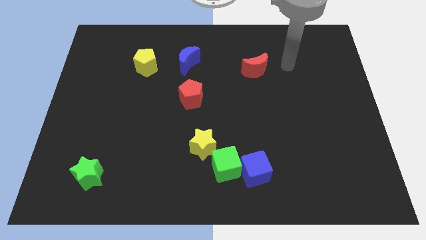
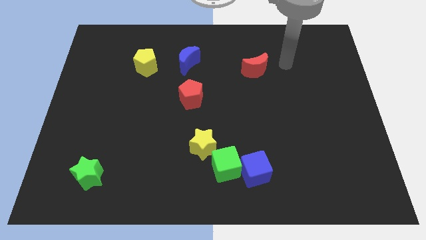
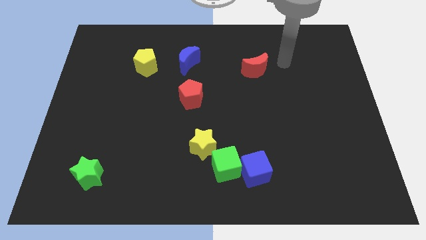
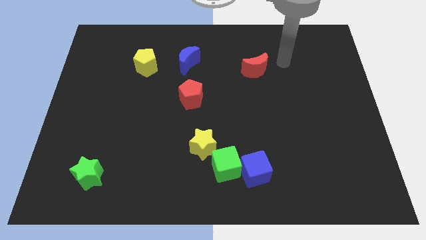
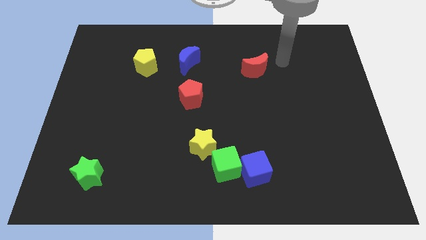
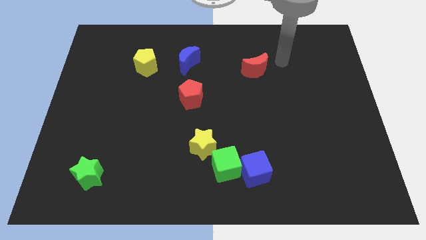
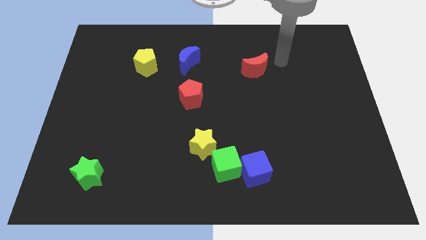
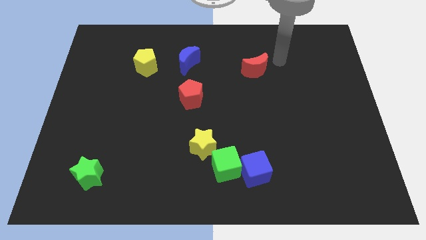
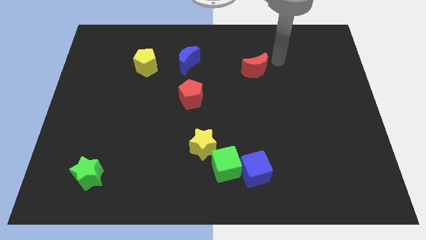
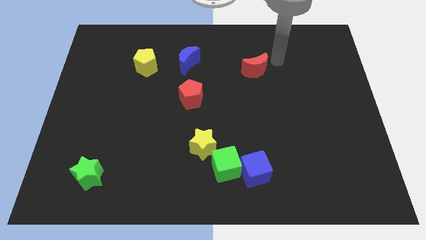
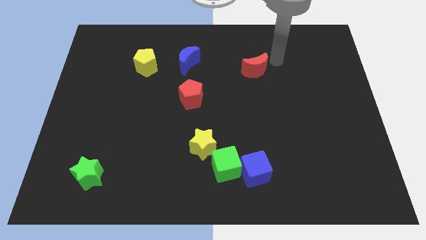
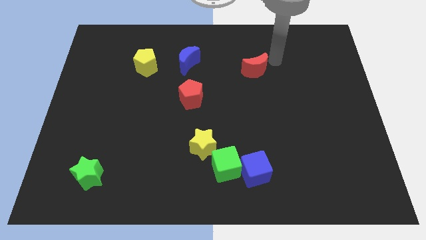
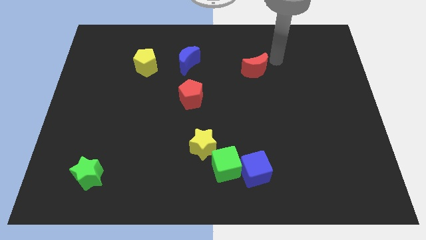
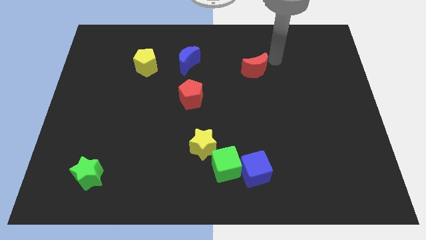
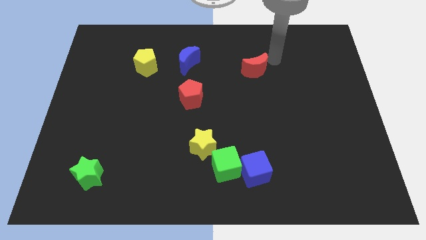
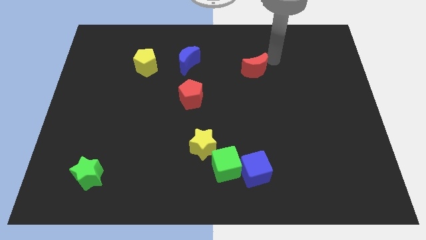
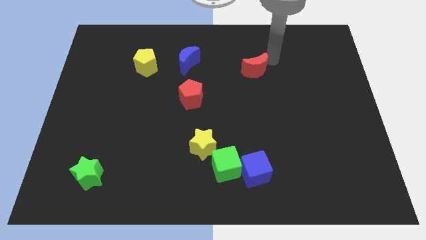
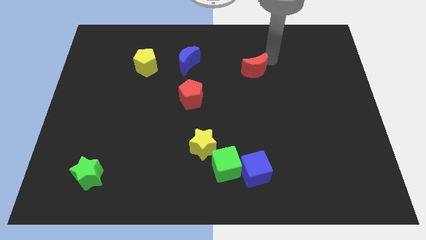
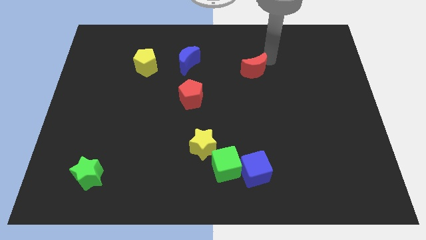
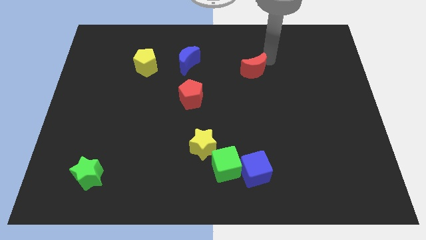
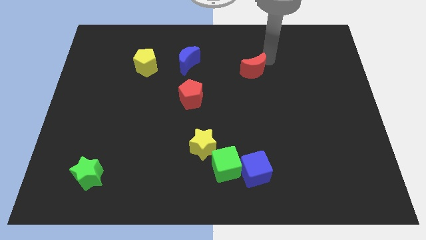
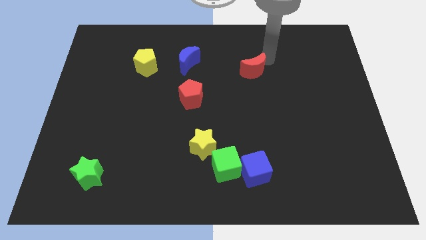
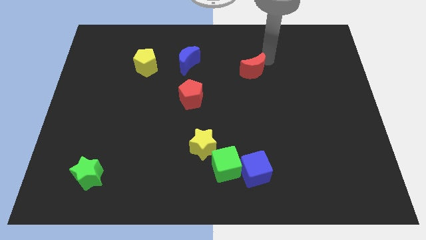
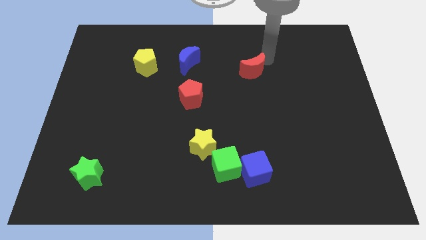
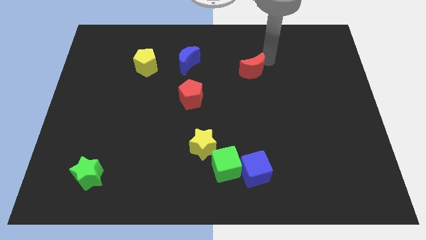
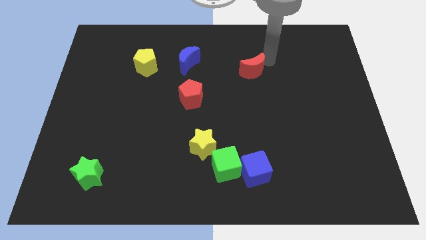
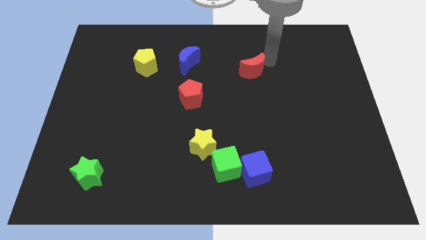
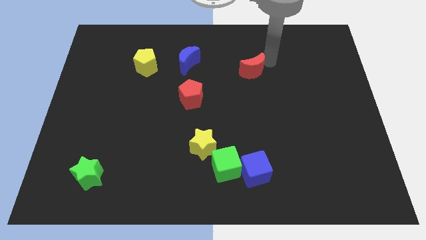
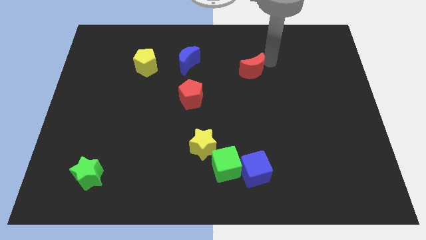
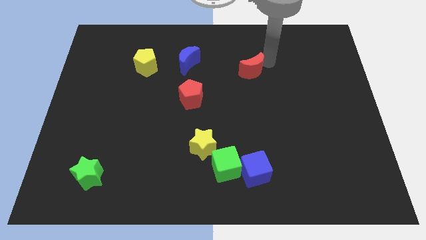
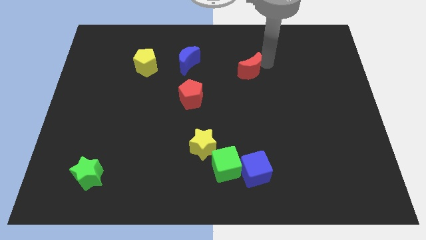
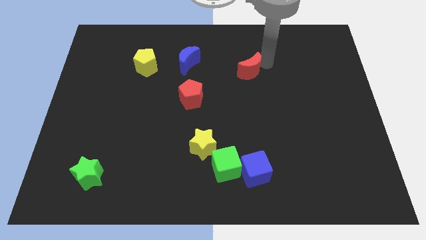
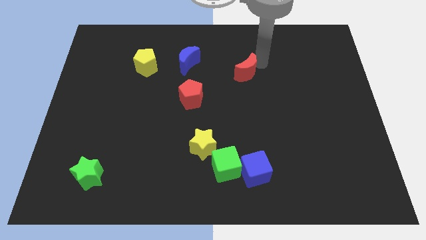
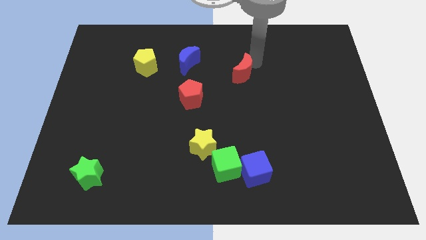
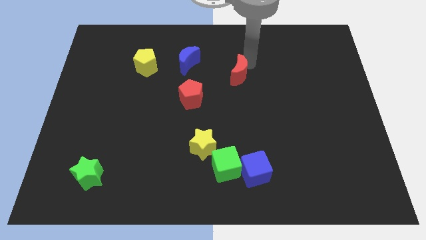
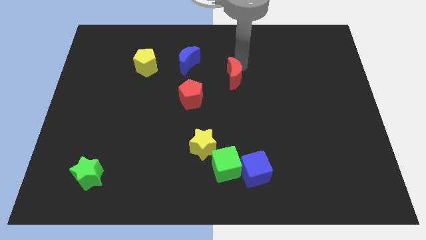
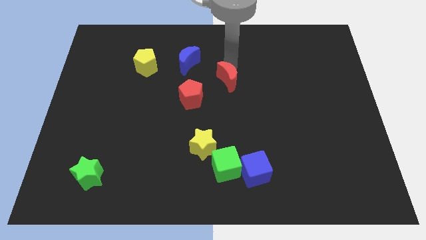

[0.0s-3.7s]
push red crescent above blue cube

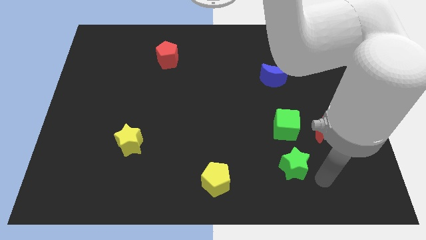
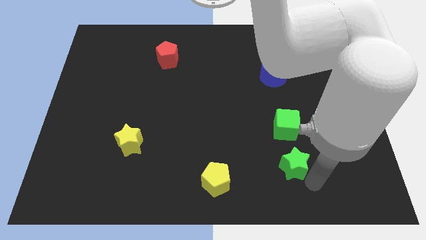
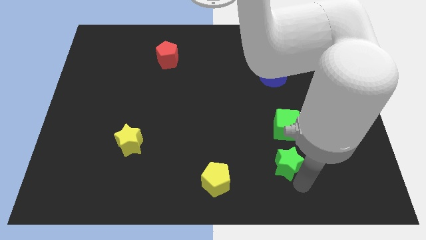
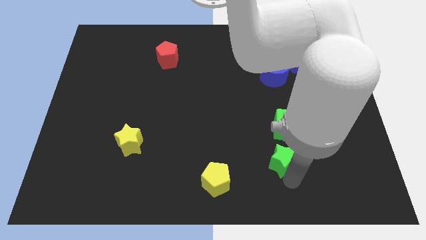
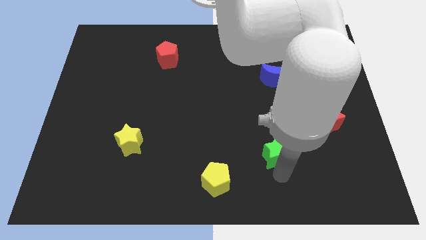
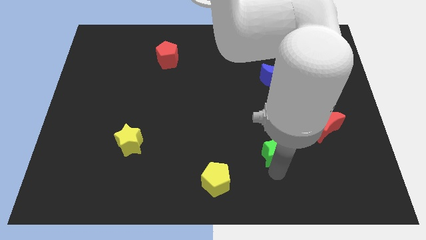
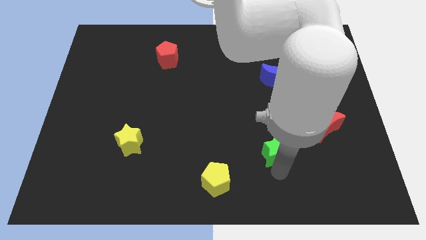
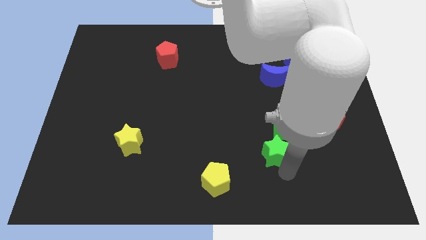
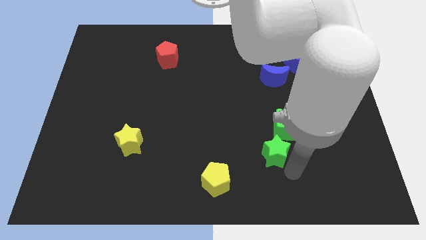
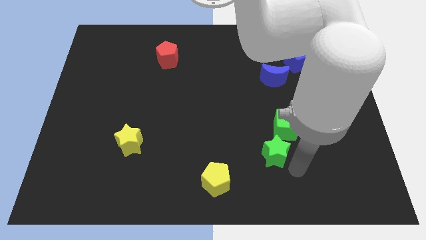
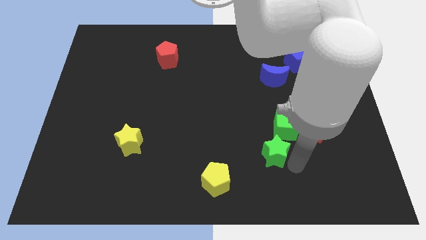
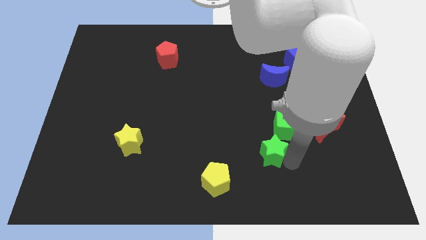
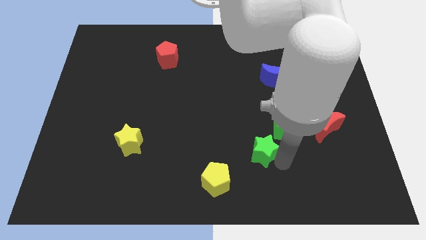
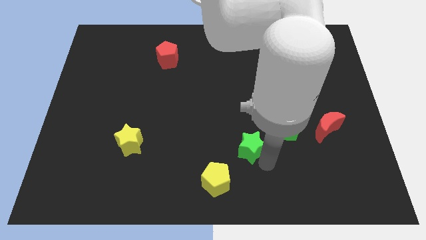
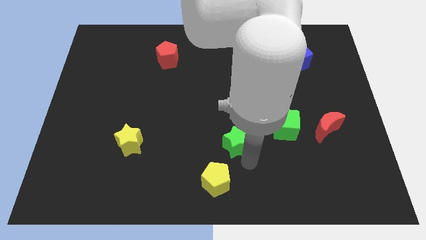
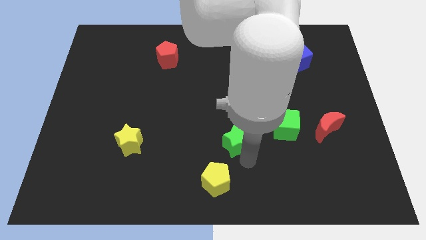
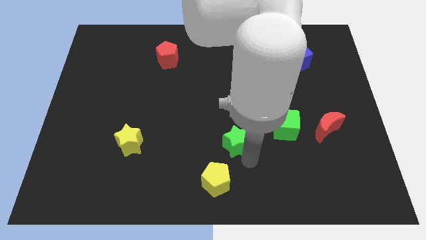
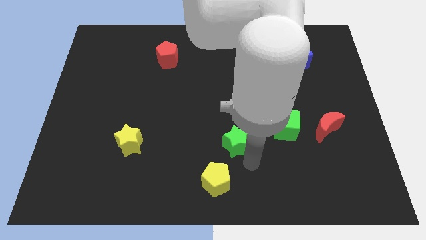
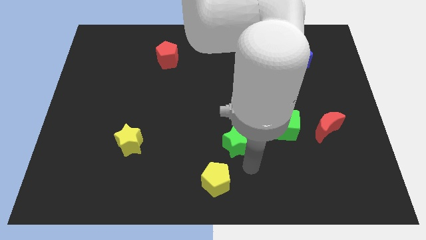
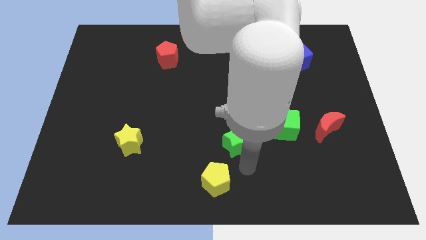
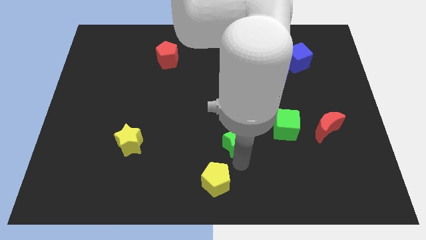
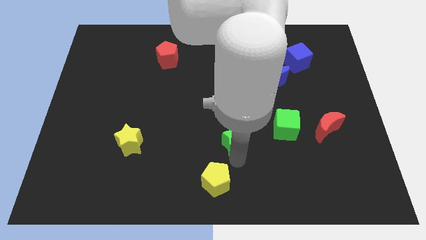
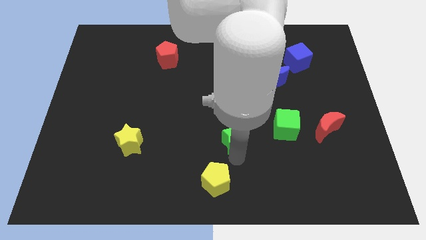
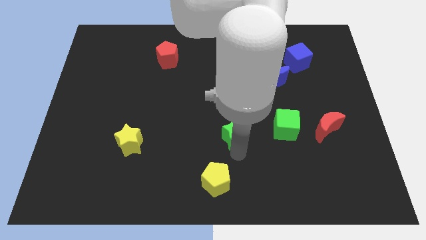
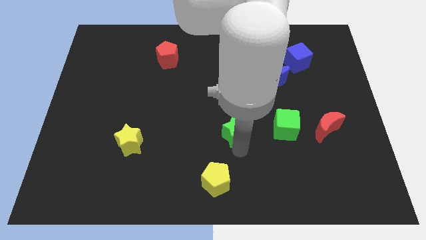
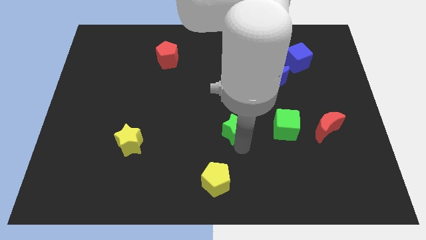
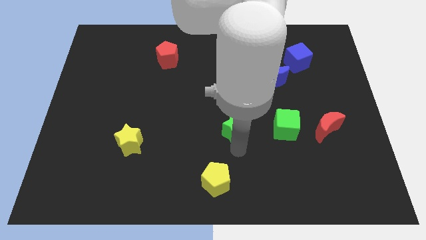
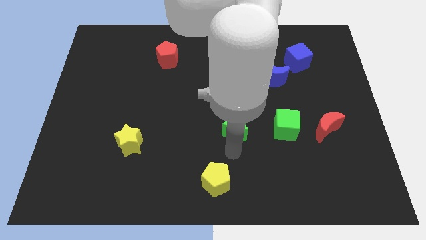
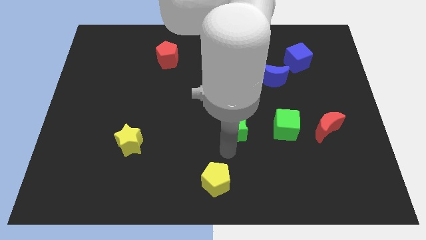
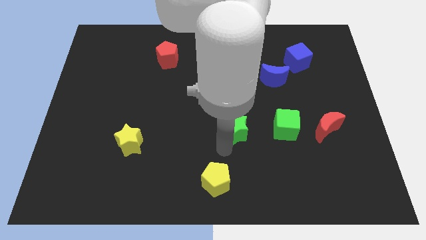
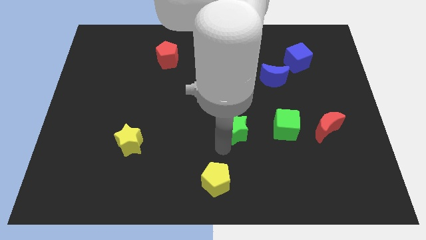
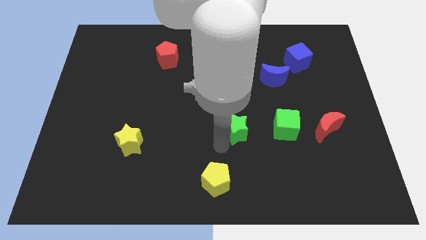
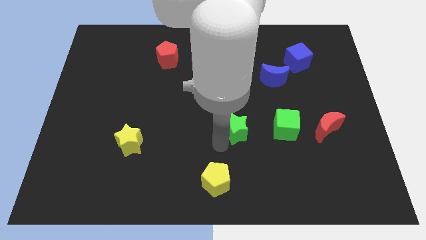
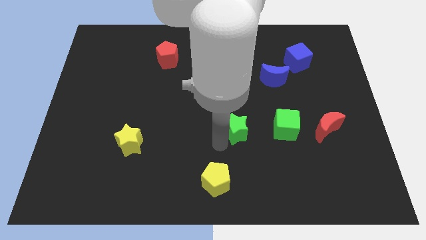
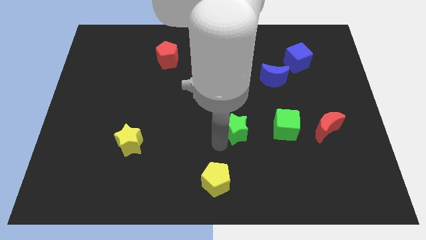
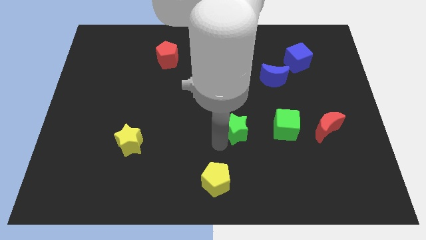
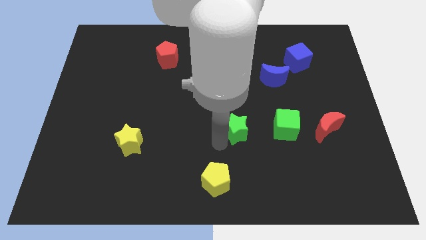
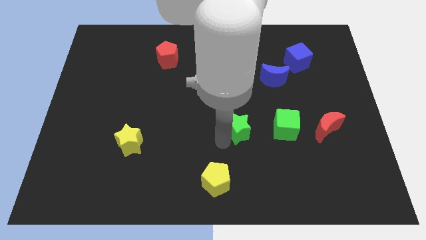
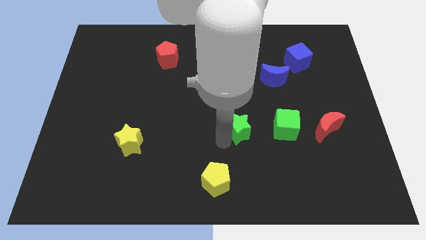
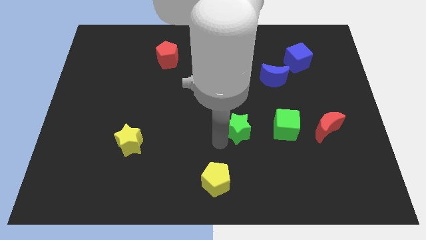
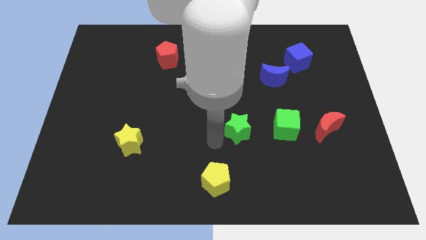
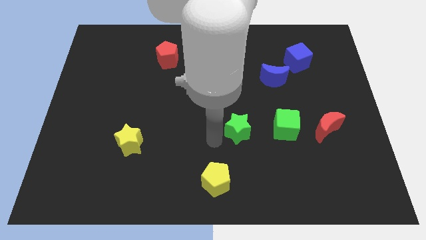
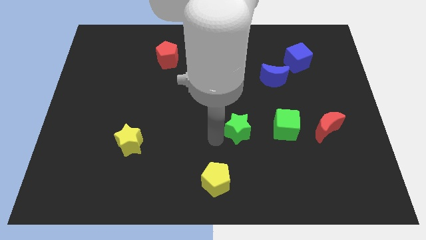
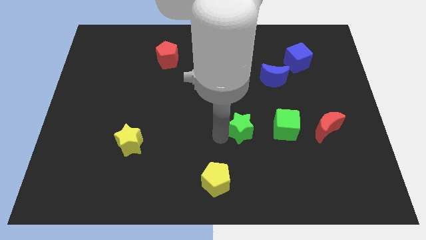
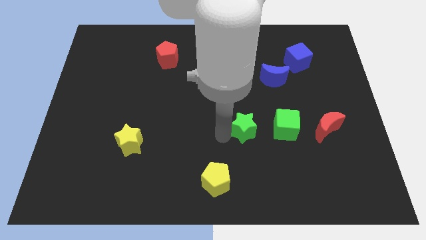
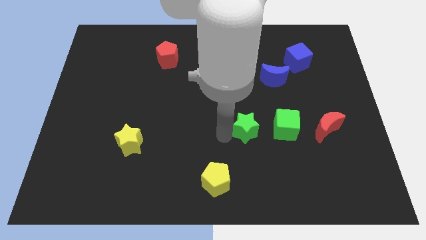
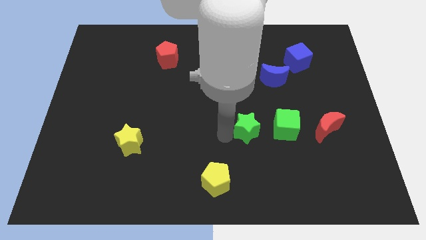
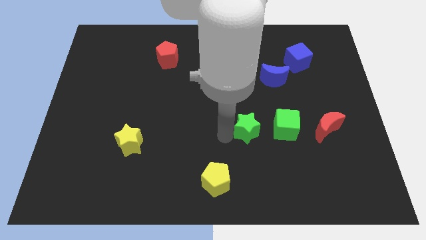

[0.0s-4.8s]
push the green star parallel to the left of green cube

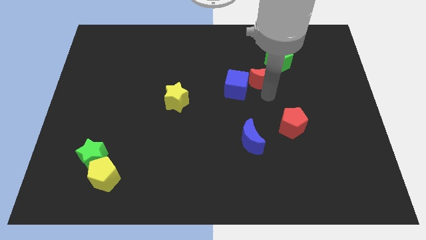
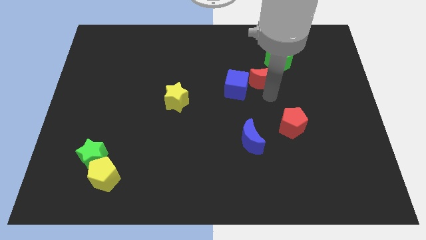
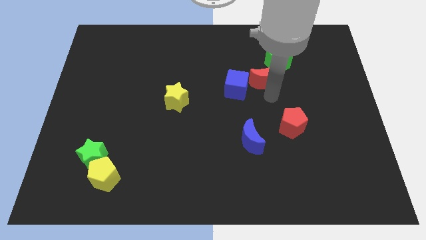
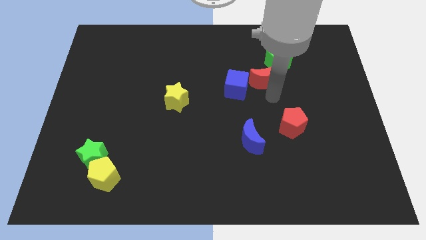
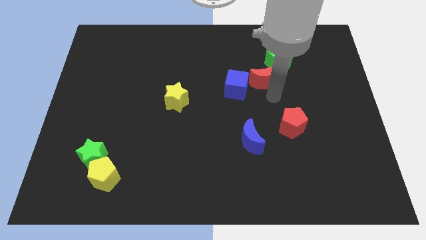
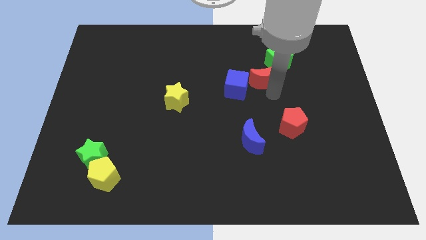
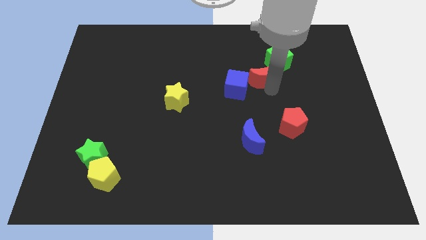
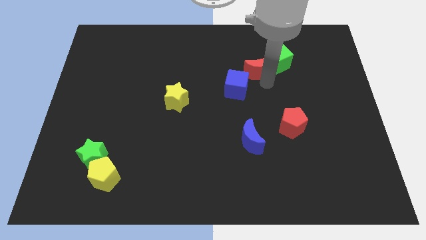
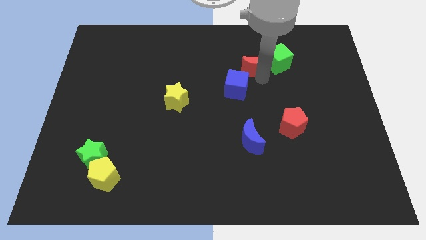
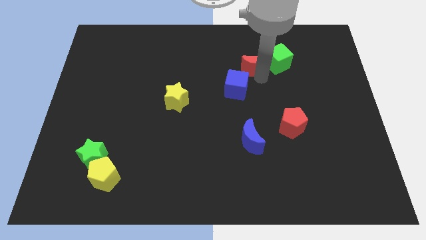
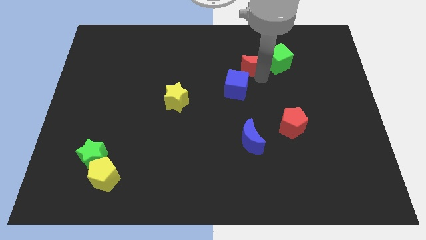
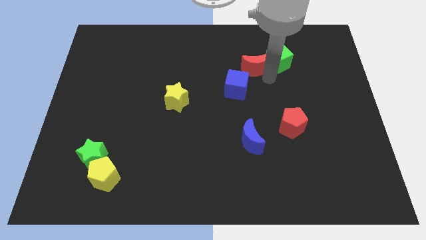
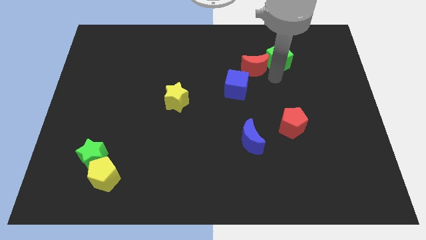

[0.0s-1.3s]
move the red crescent to the left of the green cube
